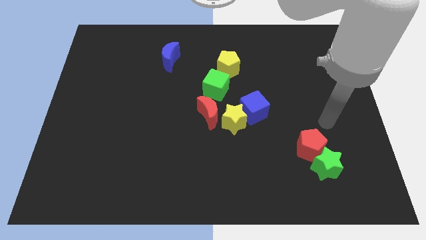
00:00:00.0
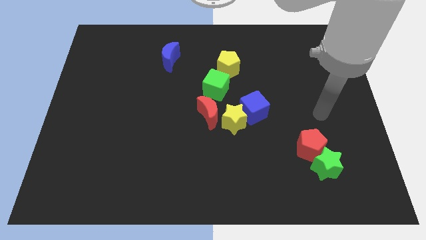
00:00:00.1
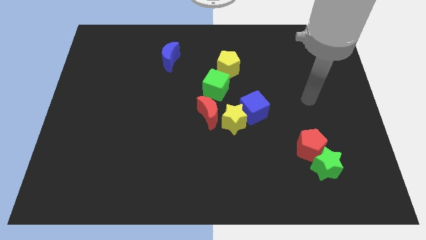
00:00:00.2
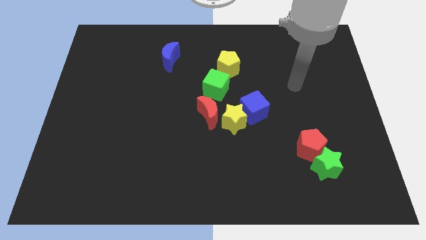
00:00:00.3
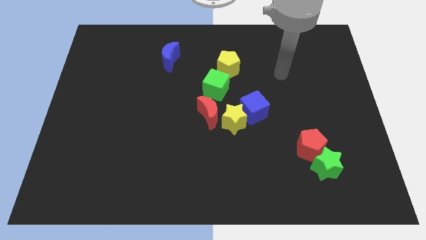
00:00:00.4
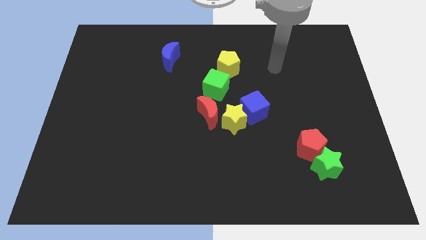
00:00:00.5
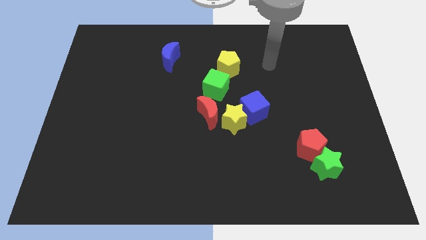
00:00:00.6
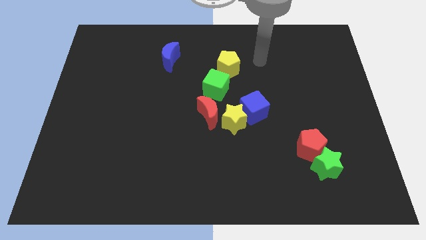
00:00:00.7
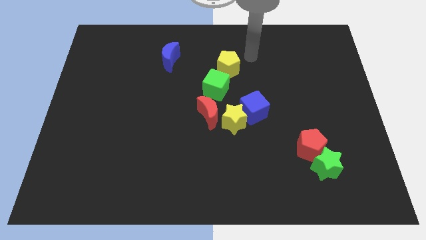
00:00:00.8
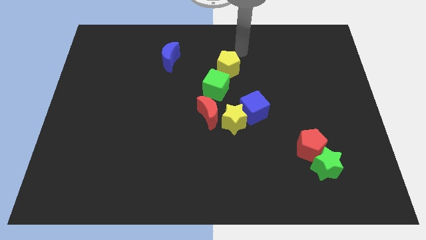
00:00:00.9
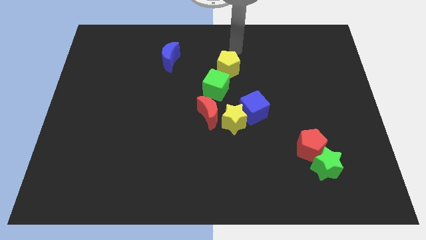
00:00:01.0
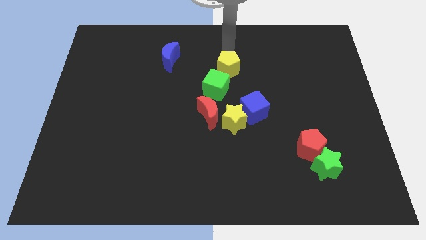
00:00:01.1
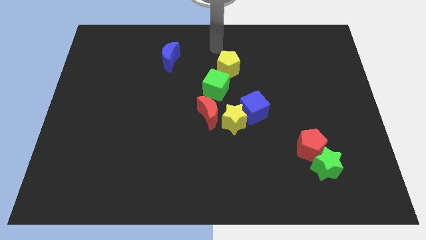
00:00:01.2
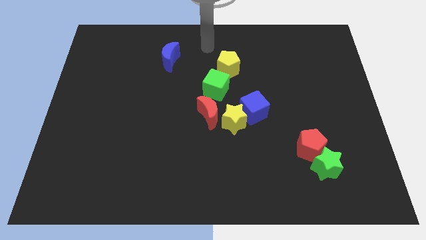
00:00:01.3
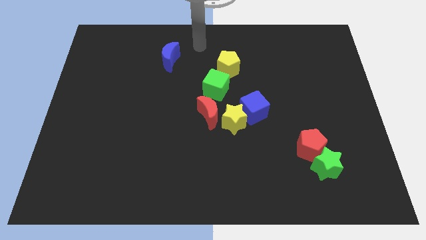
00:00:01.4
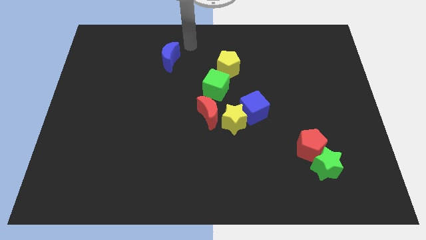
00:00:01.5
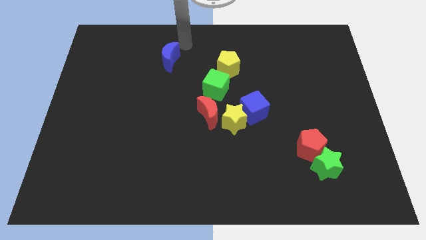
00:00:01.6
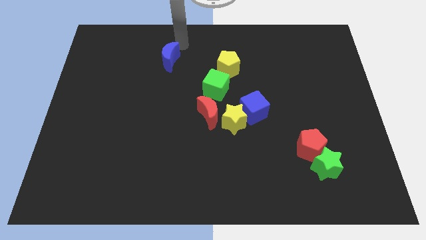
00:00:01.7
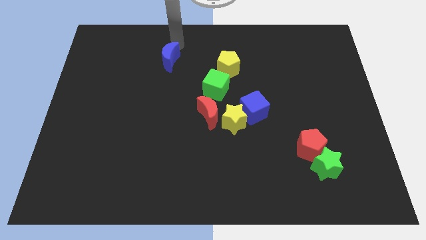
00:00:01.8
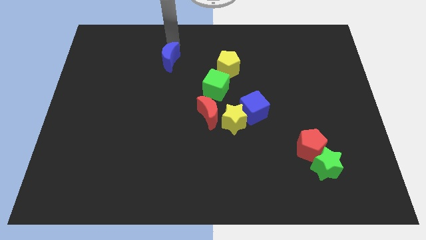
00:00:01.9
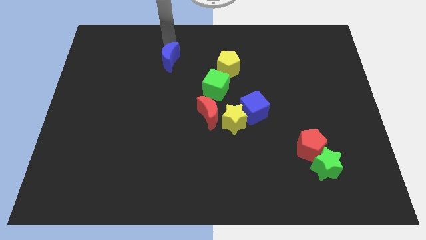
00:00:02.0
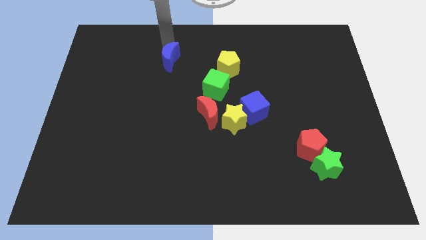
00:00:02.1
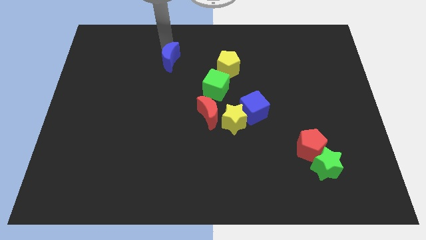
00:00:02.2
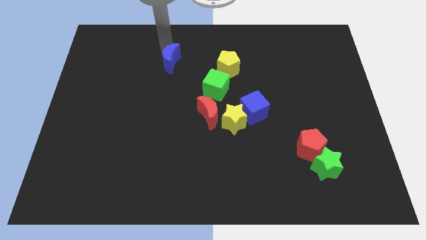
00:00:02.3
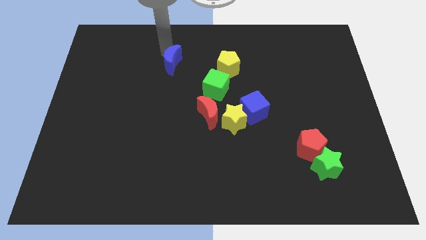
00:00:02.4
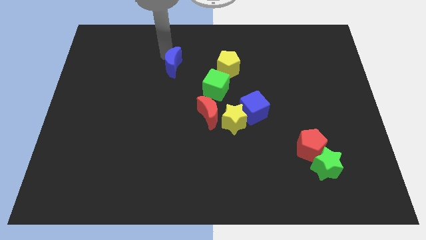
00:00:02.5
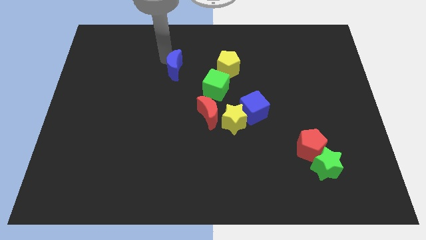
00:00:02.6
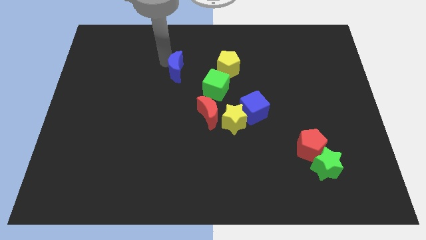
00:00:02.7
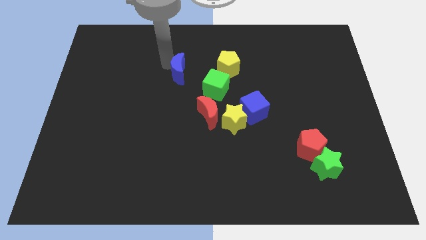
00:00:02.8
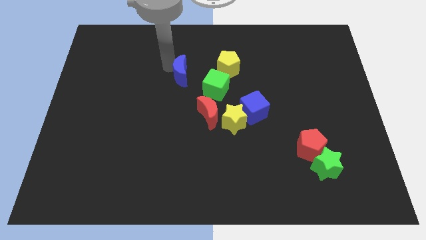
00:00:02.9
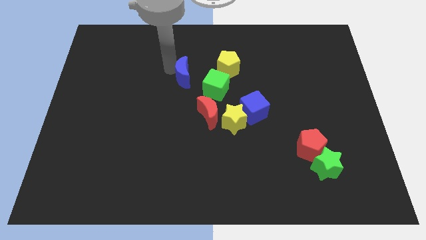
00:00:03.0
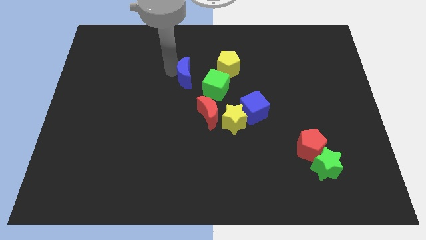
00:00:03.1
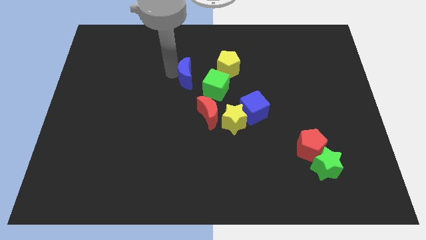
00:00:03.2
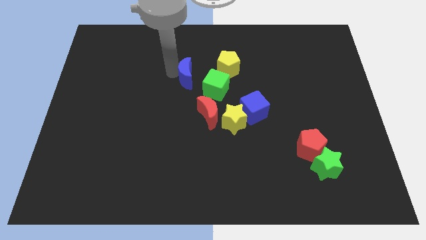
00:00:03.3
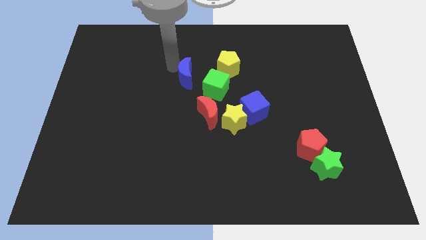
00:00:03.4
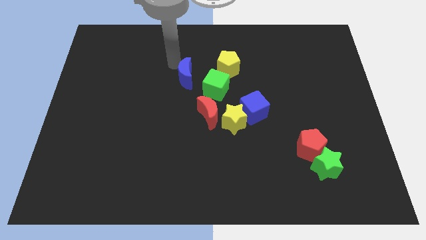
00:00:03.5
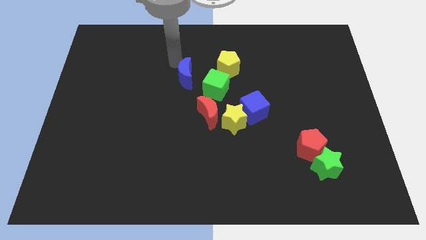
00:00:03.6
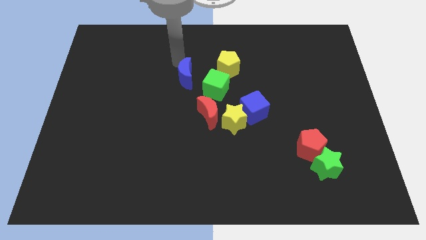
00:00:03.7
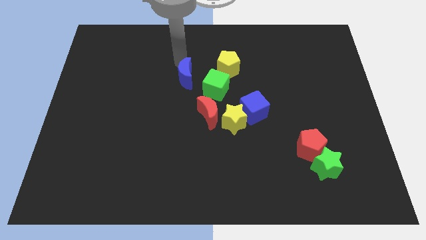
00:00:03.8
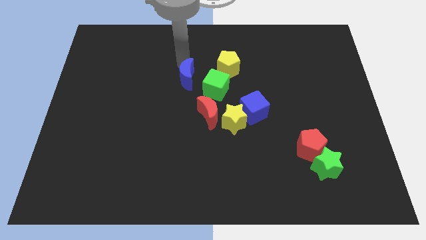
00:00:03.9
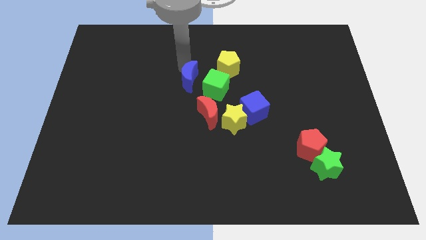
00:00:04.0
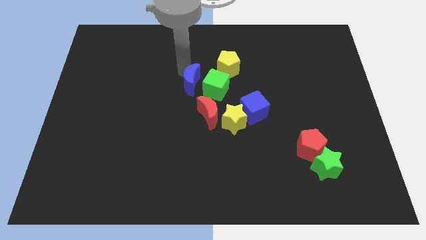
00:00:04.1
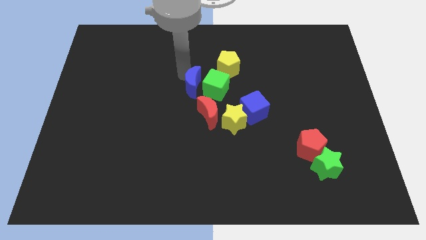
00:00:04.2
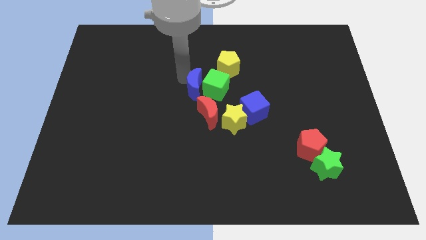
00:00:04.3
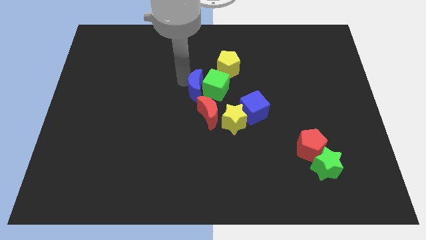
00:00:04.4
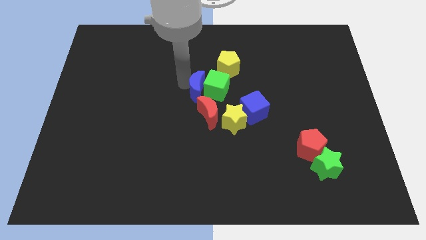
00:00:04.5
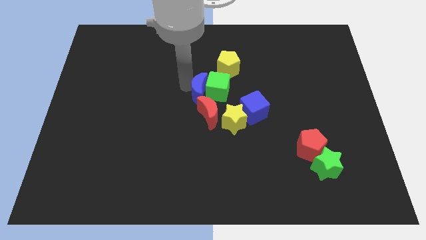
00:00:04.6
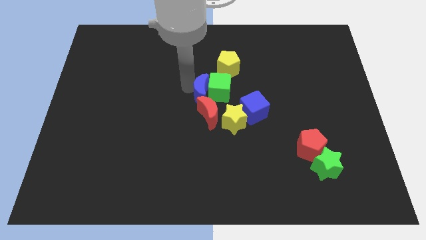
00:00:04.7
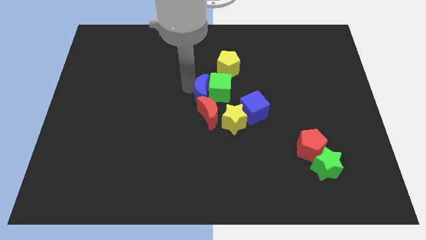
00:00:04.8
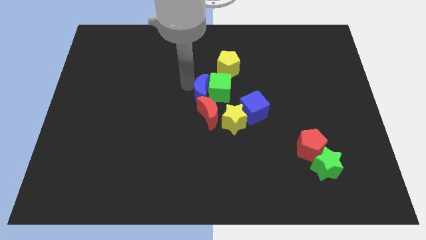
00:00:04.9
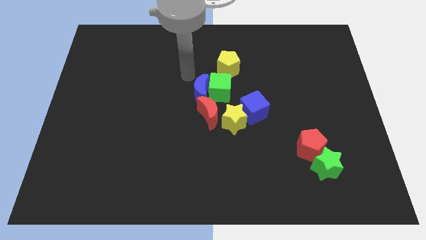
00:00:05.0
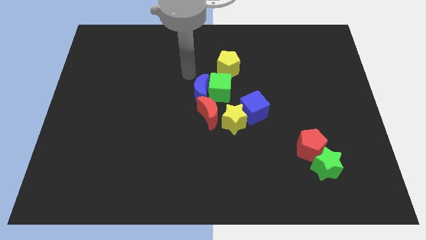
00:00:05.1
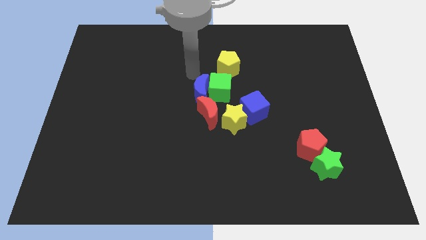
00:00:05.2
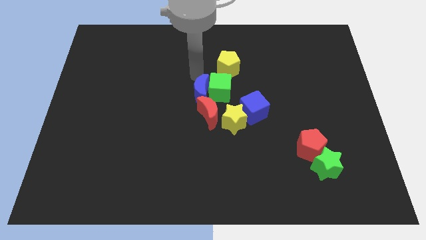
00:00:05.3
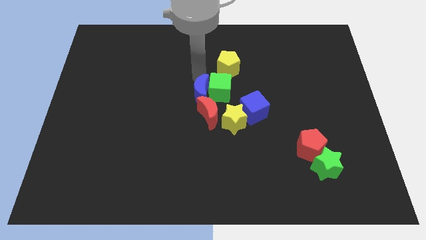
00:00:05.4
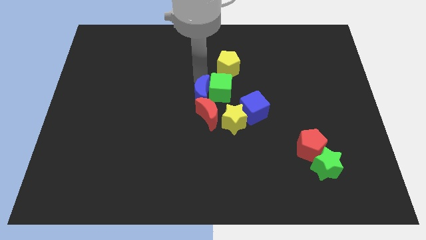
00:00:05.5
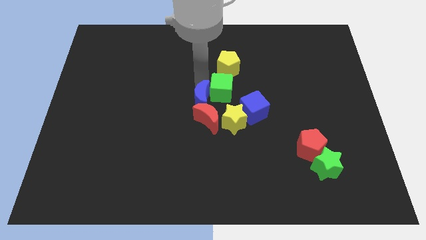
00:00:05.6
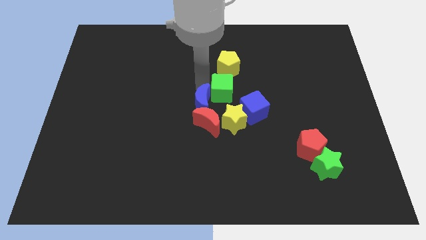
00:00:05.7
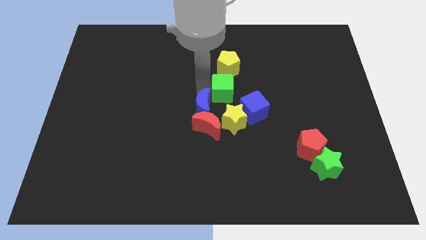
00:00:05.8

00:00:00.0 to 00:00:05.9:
put the blue moon close to the red moon

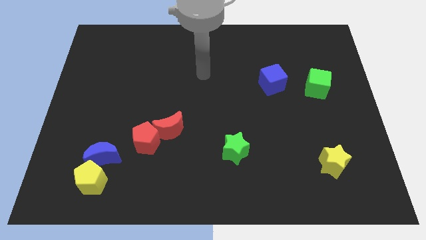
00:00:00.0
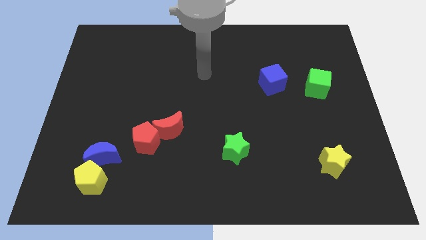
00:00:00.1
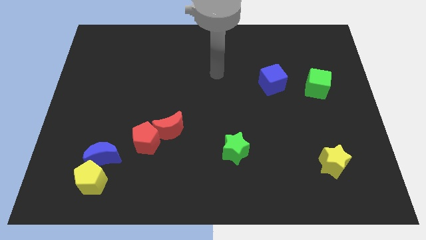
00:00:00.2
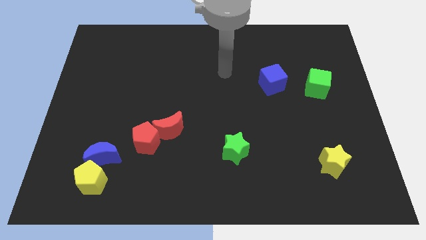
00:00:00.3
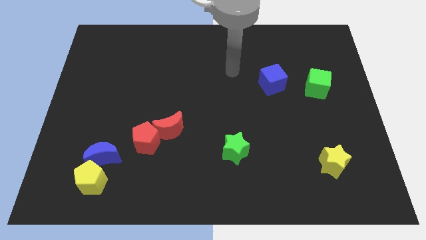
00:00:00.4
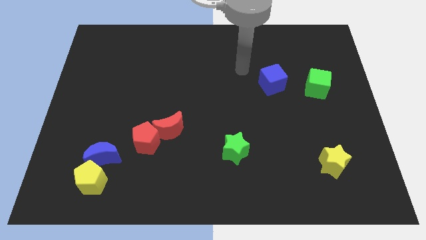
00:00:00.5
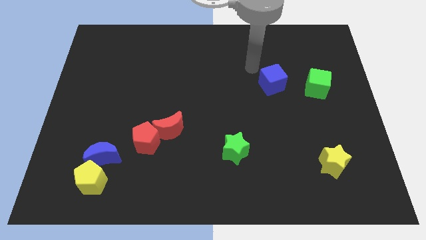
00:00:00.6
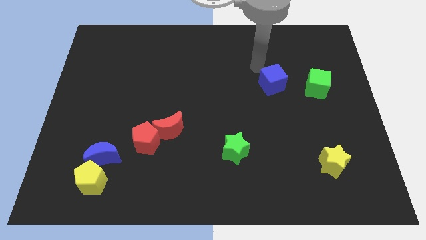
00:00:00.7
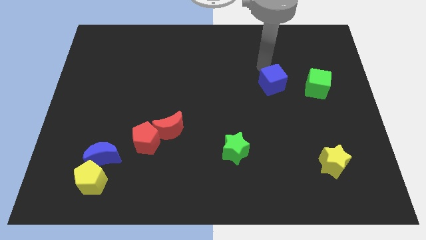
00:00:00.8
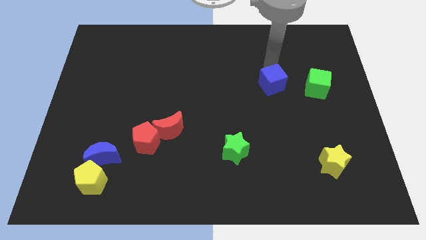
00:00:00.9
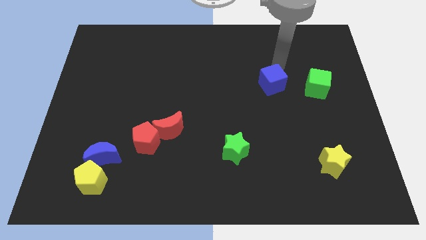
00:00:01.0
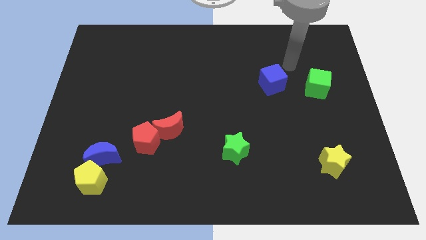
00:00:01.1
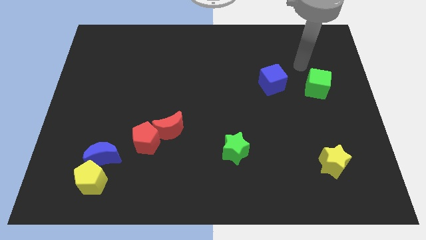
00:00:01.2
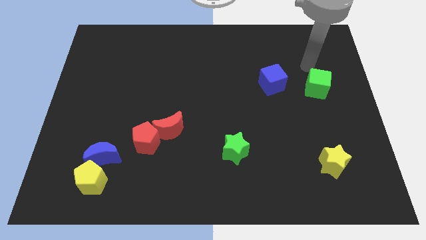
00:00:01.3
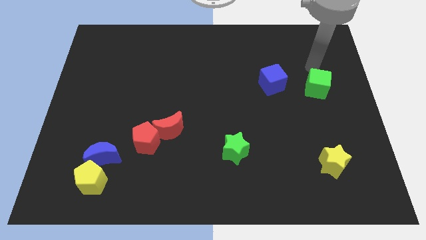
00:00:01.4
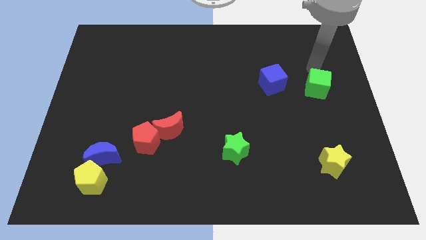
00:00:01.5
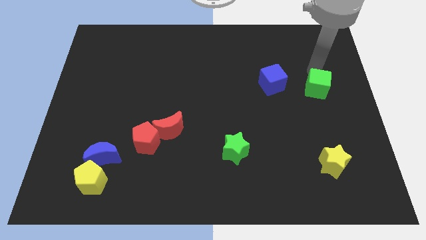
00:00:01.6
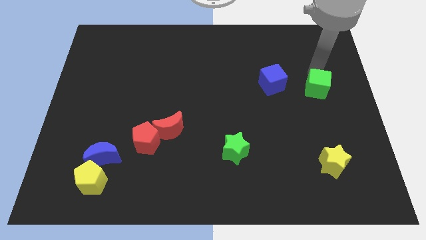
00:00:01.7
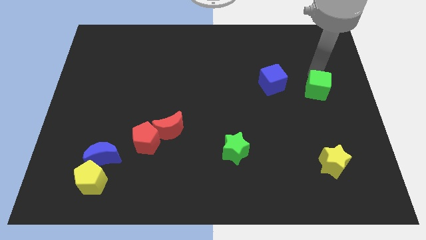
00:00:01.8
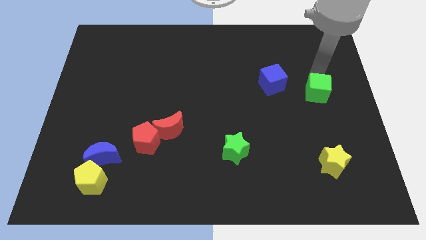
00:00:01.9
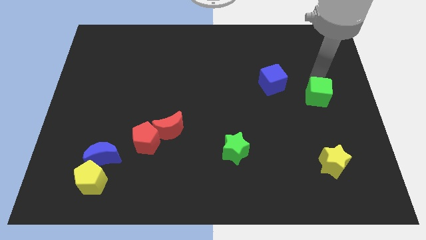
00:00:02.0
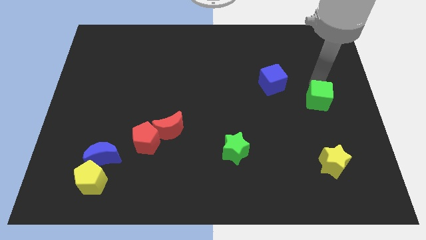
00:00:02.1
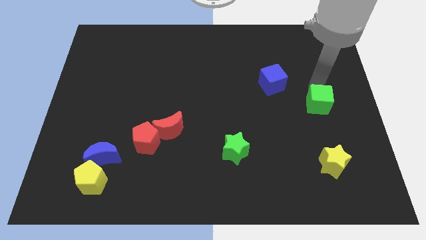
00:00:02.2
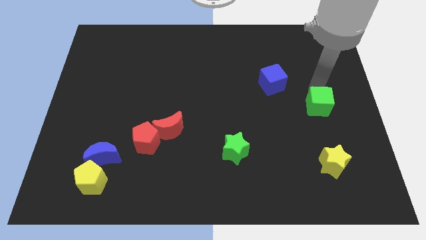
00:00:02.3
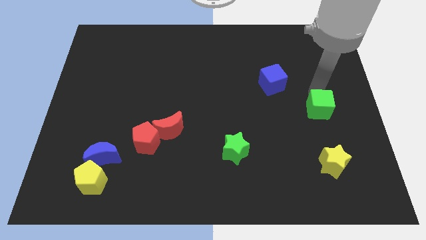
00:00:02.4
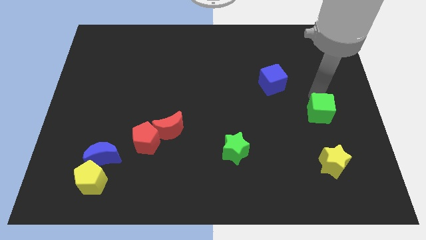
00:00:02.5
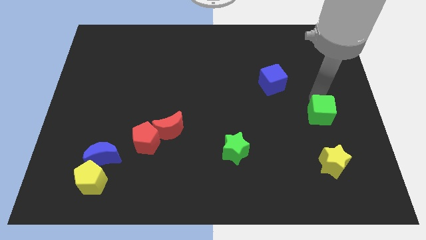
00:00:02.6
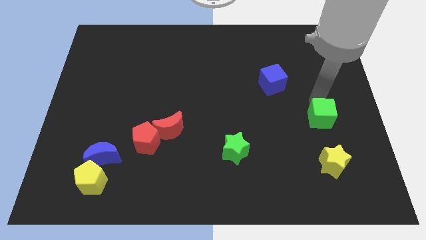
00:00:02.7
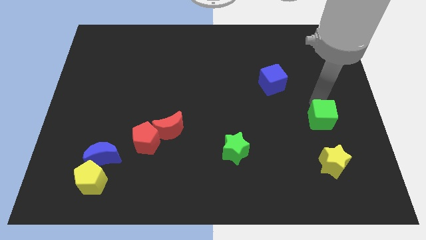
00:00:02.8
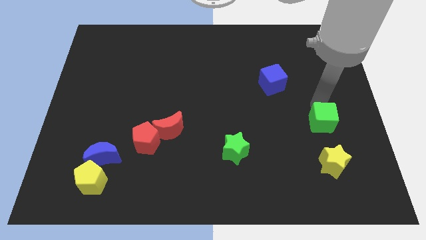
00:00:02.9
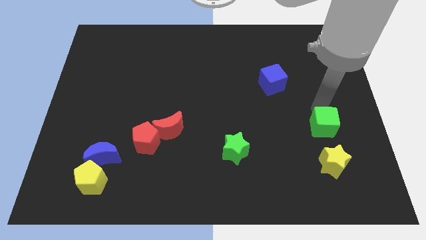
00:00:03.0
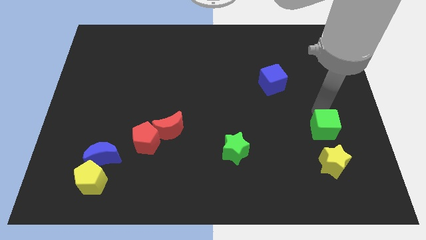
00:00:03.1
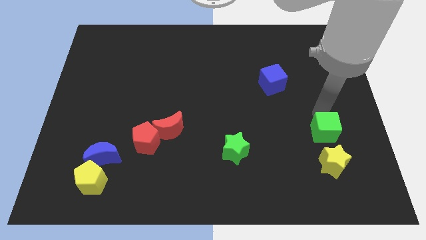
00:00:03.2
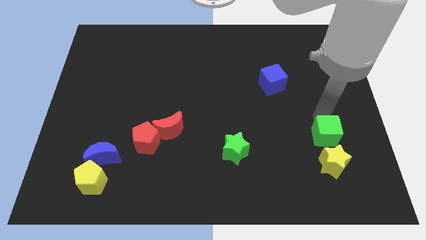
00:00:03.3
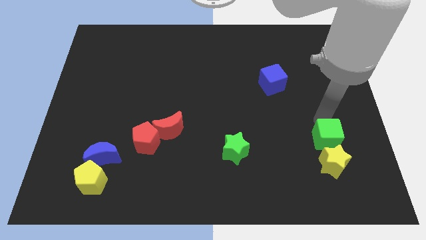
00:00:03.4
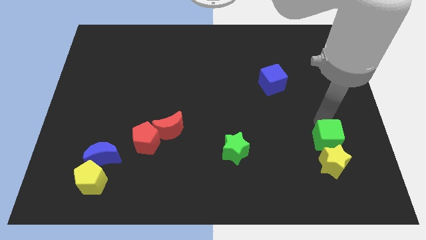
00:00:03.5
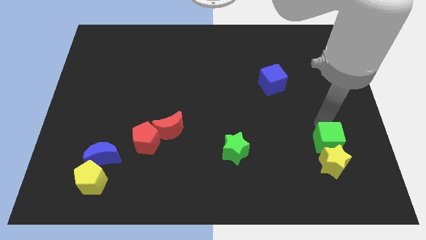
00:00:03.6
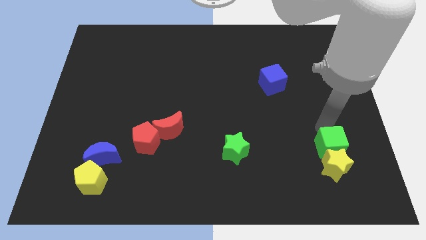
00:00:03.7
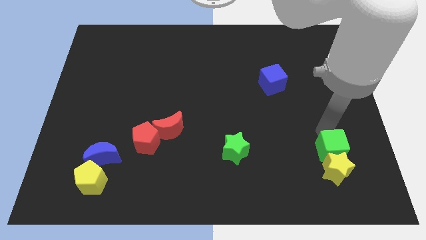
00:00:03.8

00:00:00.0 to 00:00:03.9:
put the green cube close to the yellow star
